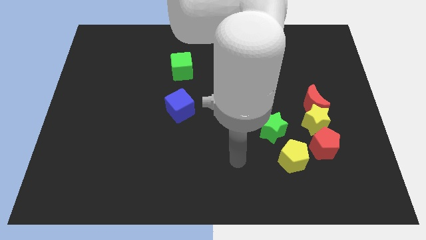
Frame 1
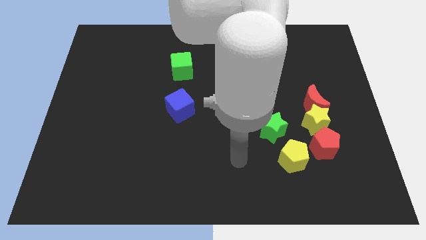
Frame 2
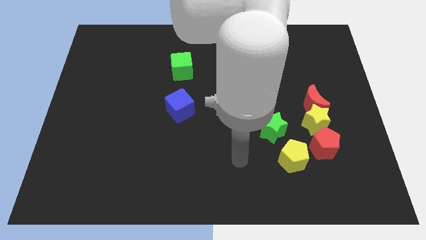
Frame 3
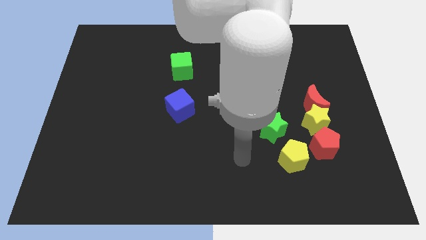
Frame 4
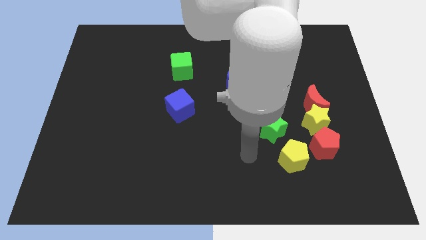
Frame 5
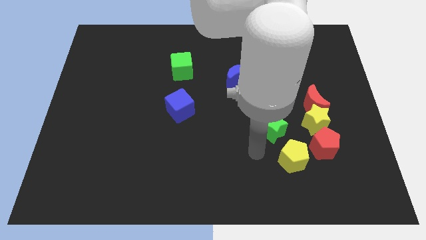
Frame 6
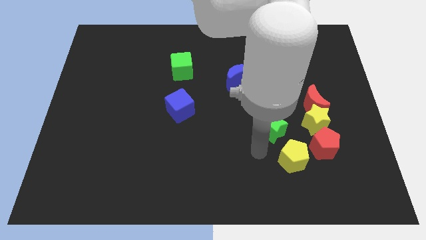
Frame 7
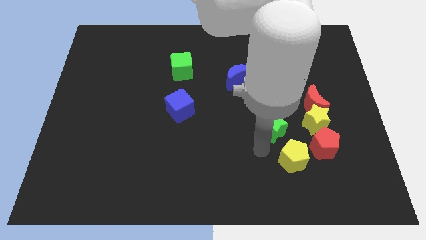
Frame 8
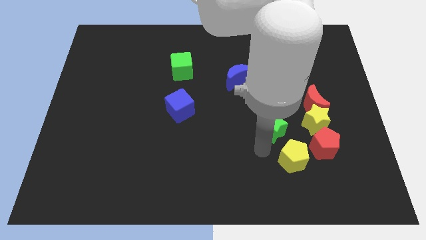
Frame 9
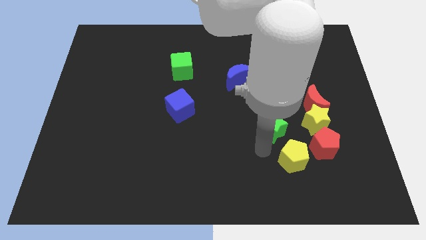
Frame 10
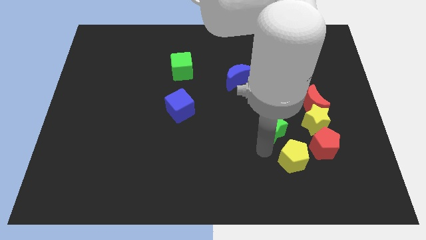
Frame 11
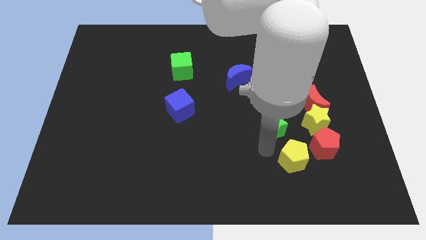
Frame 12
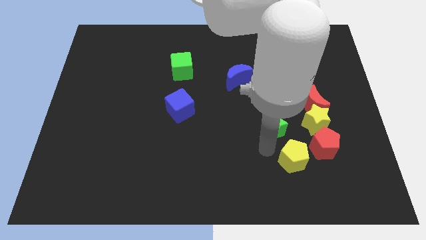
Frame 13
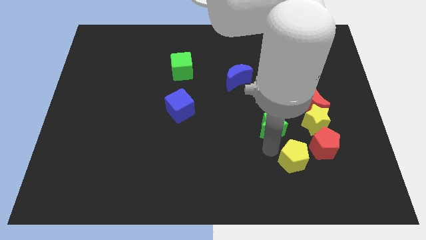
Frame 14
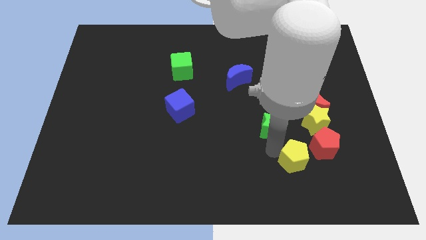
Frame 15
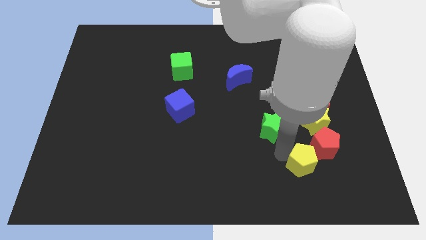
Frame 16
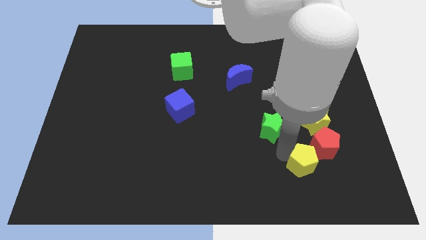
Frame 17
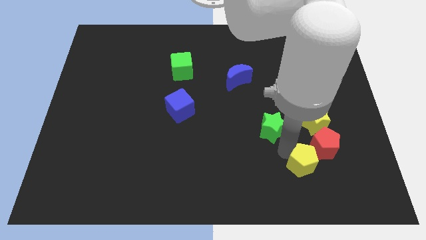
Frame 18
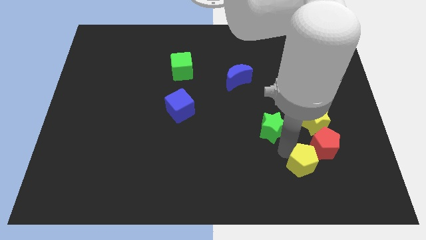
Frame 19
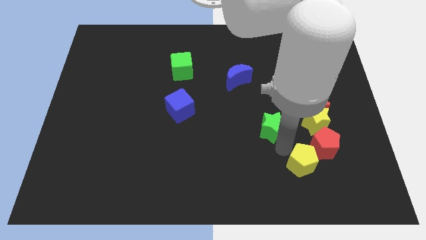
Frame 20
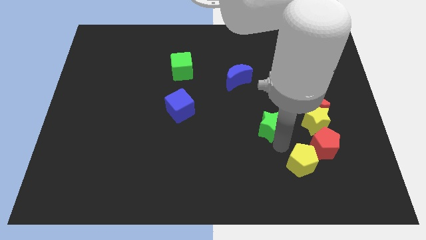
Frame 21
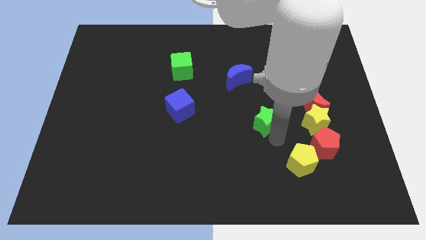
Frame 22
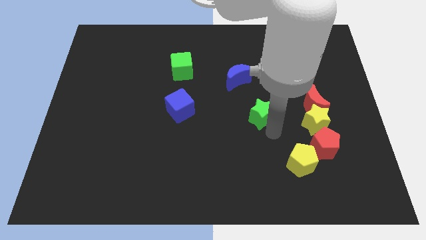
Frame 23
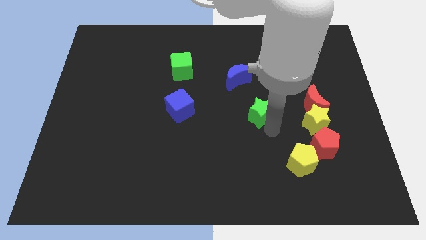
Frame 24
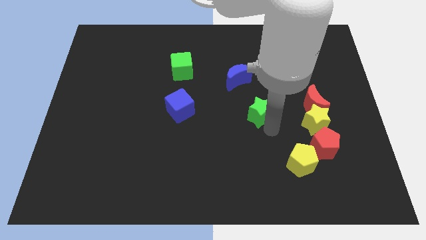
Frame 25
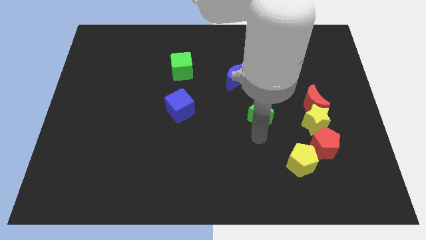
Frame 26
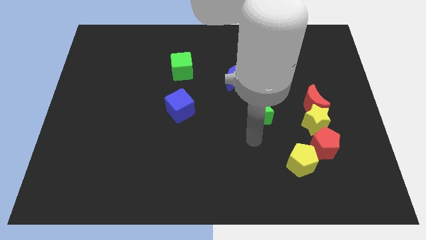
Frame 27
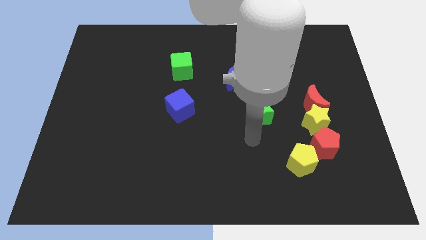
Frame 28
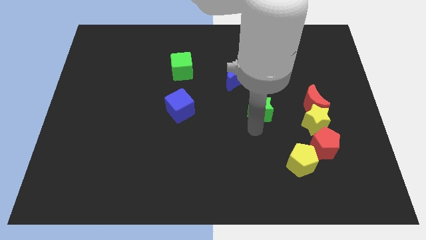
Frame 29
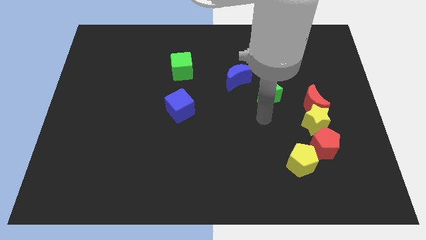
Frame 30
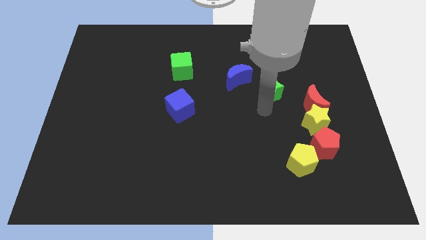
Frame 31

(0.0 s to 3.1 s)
push green star upwards

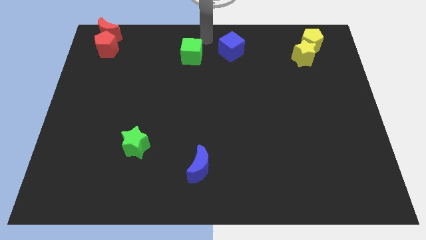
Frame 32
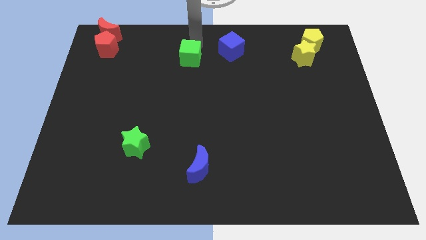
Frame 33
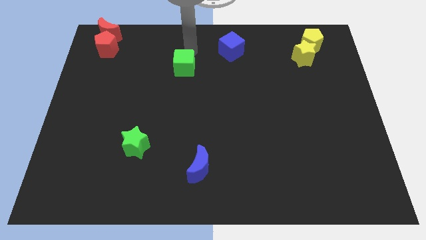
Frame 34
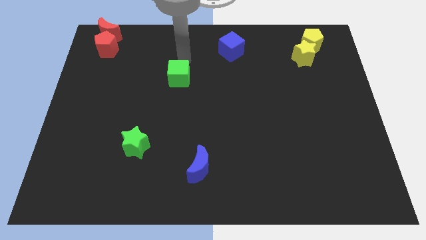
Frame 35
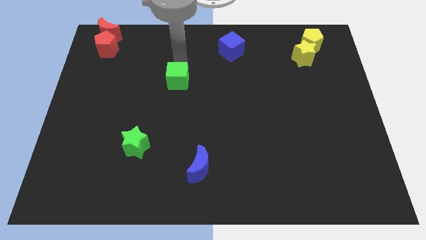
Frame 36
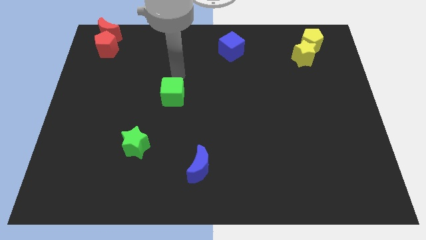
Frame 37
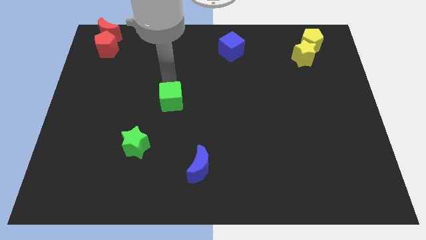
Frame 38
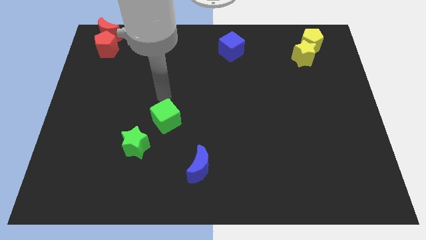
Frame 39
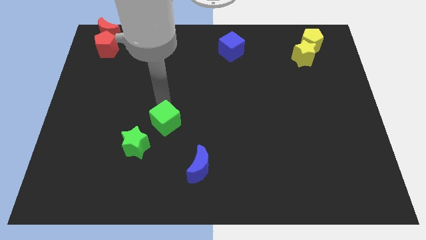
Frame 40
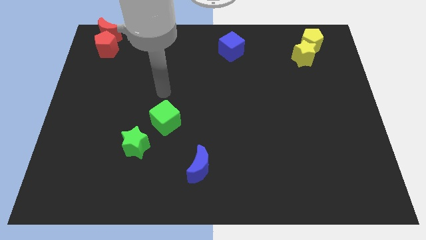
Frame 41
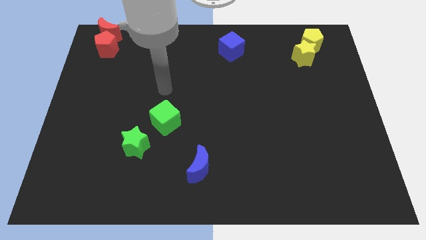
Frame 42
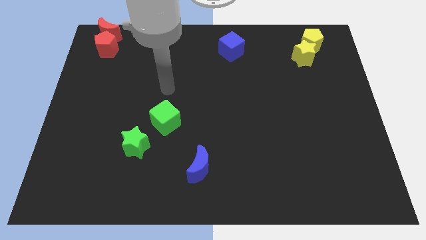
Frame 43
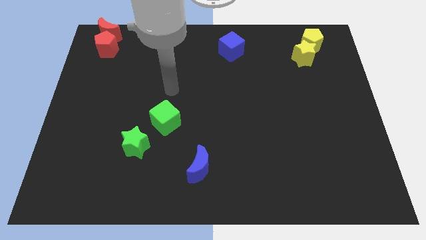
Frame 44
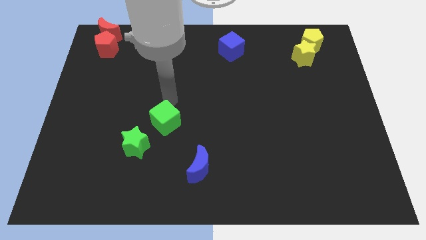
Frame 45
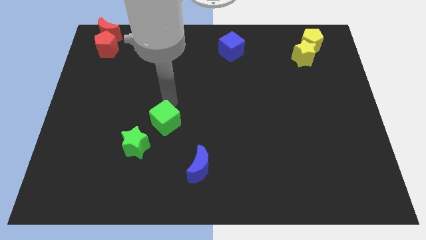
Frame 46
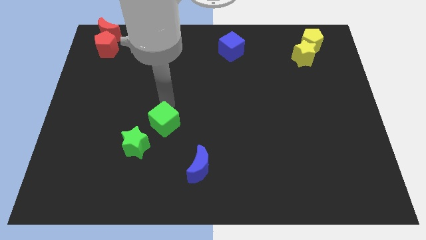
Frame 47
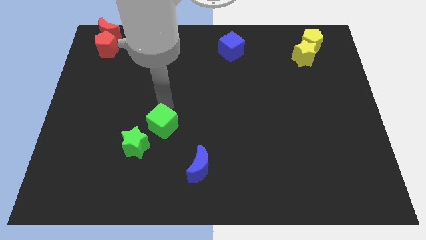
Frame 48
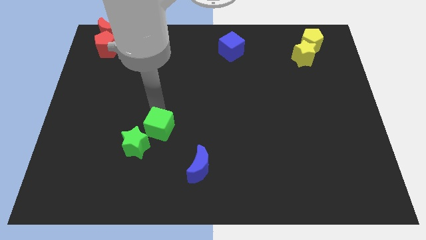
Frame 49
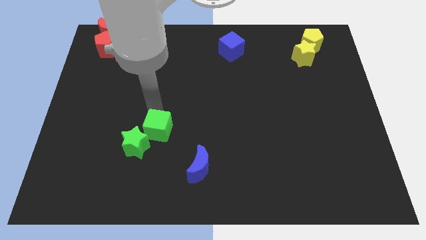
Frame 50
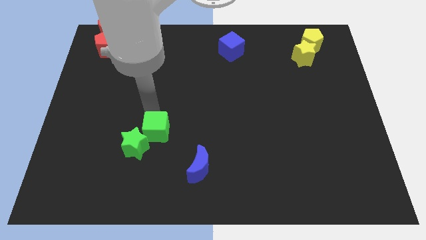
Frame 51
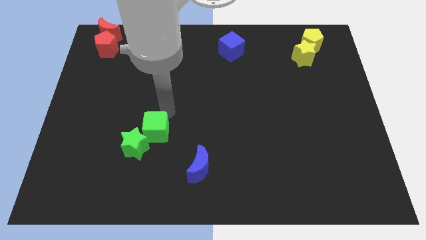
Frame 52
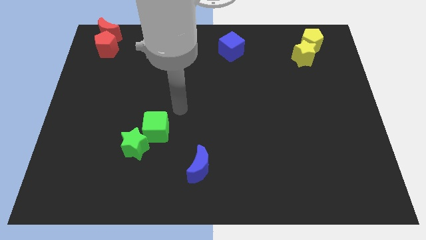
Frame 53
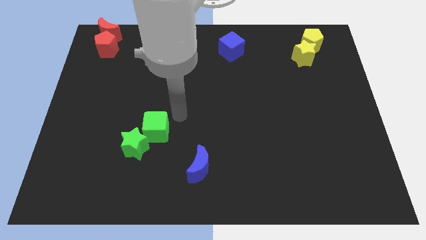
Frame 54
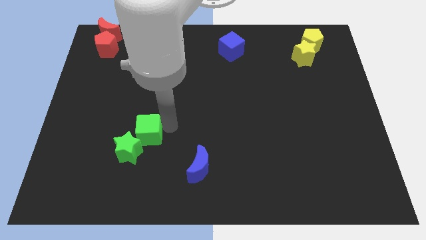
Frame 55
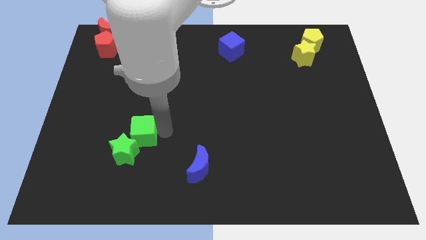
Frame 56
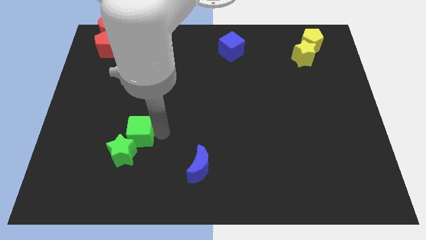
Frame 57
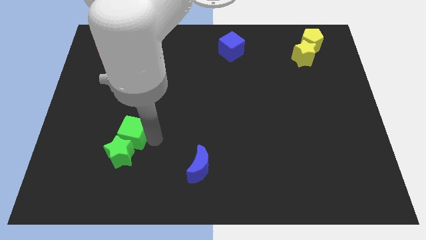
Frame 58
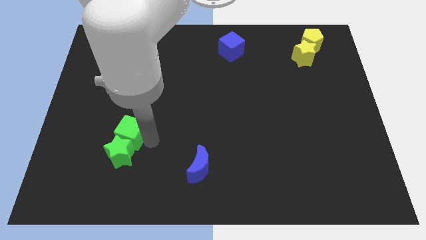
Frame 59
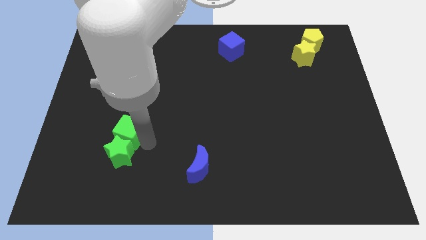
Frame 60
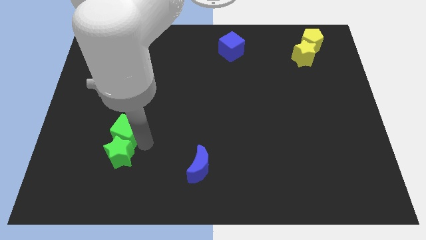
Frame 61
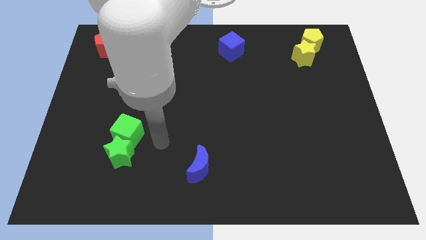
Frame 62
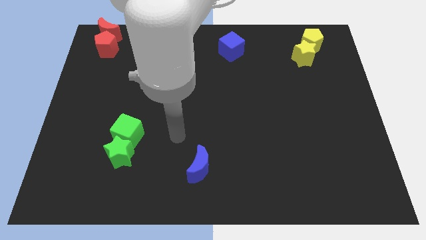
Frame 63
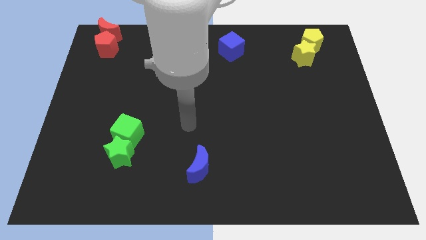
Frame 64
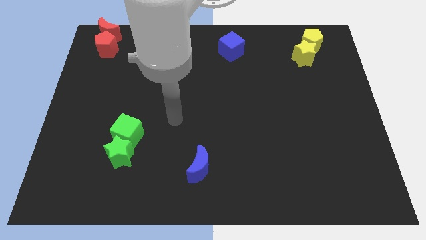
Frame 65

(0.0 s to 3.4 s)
place the green cube above the green star

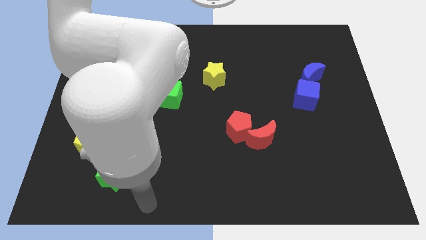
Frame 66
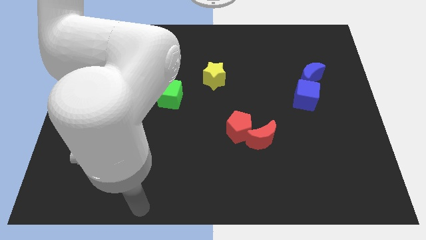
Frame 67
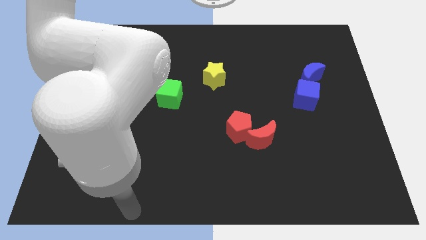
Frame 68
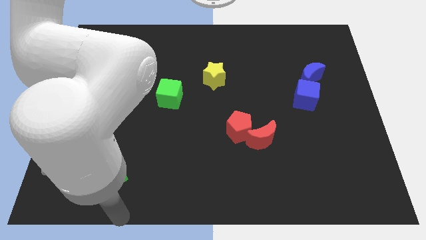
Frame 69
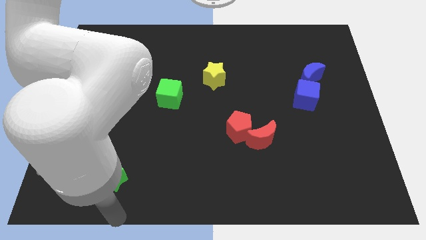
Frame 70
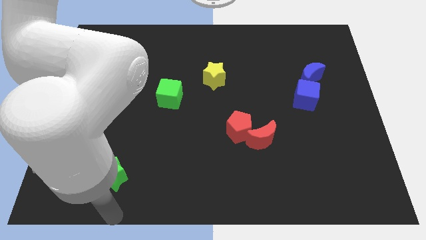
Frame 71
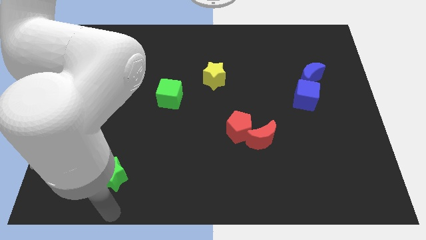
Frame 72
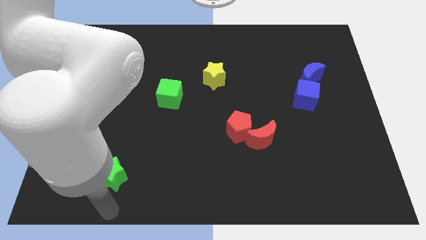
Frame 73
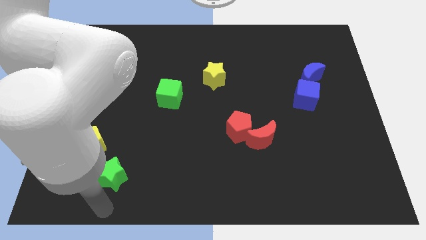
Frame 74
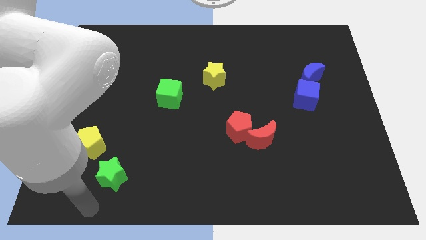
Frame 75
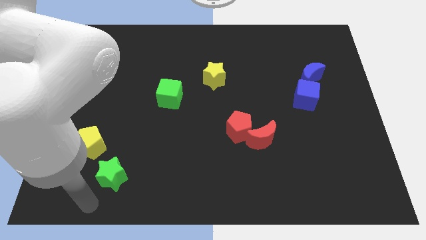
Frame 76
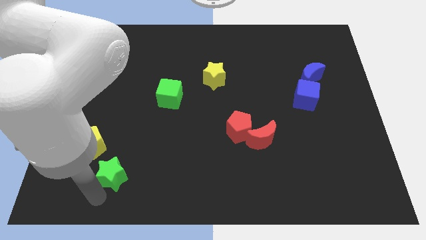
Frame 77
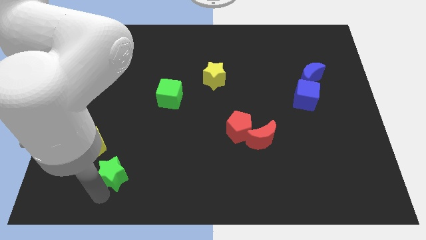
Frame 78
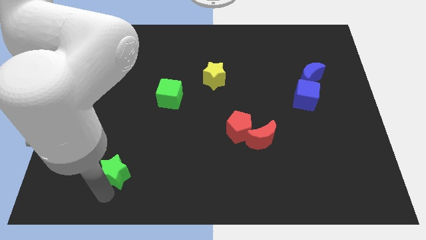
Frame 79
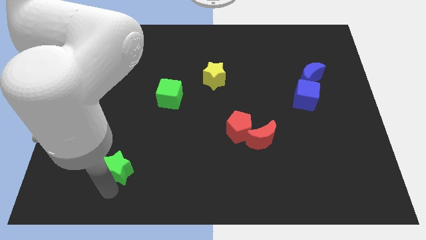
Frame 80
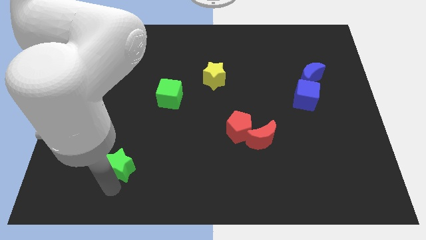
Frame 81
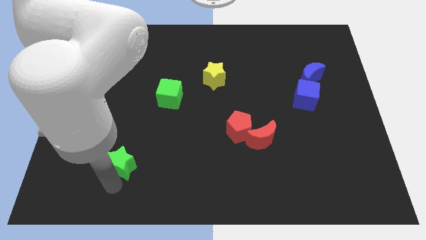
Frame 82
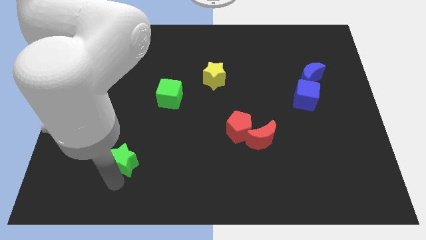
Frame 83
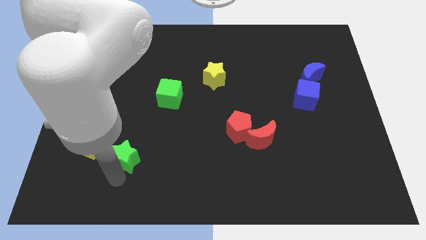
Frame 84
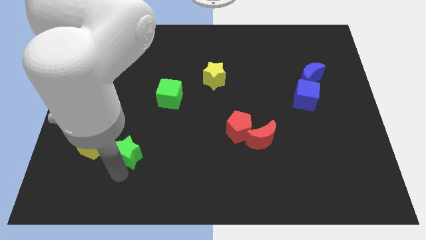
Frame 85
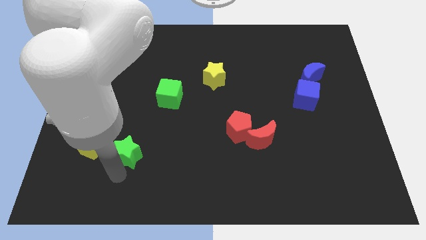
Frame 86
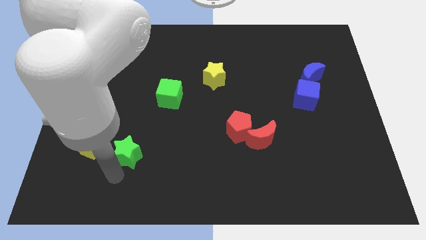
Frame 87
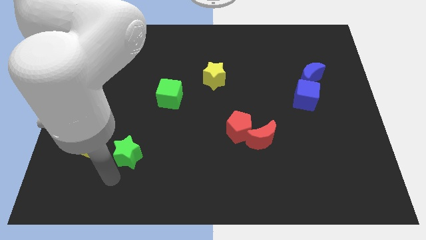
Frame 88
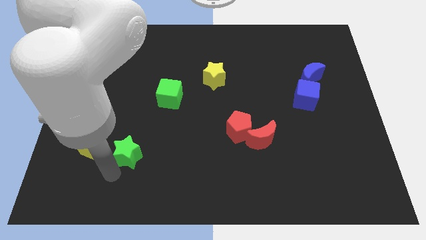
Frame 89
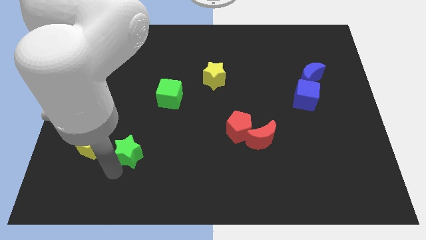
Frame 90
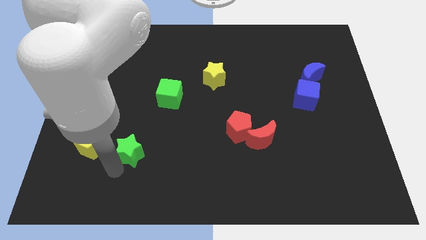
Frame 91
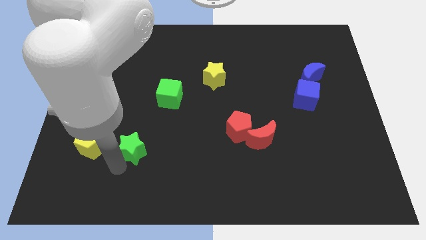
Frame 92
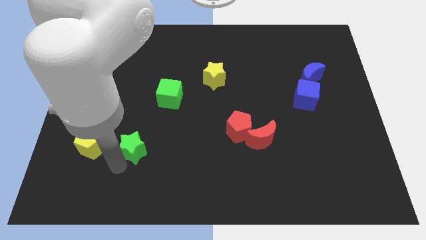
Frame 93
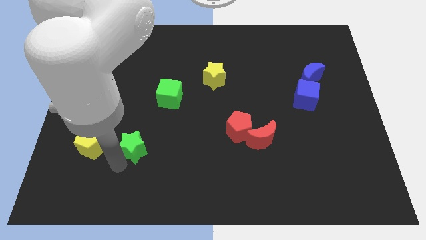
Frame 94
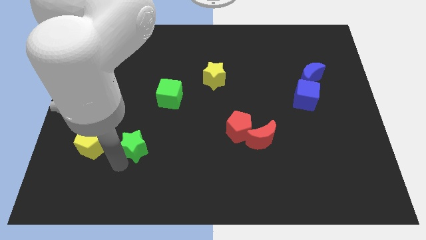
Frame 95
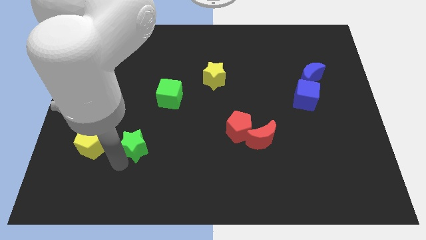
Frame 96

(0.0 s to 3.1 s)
place the green star at the right side of the yellow pentagon
